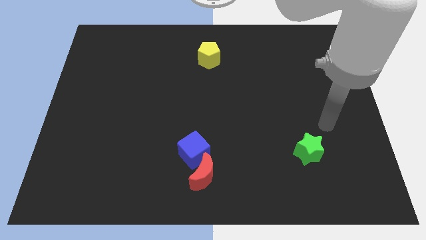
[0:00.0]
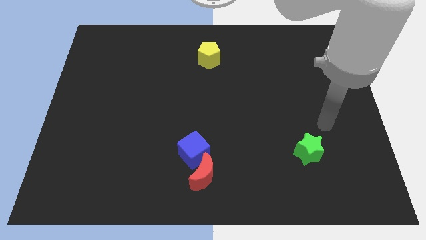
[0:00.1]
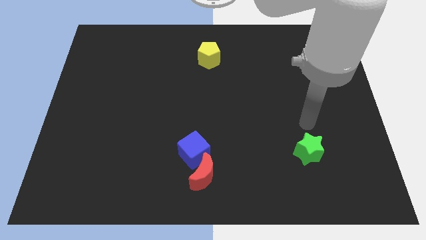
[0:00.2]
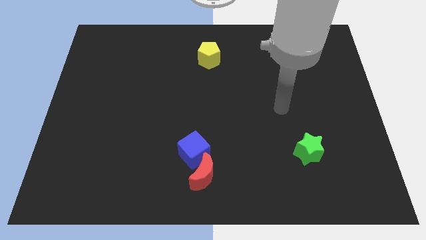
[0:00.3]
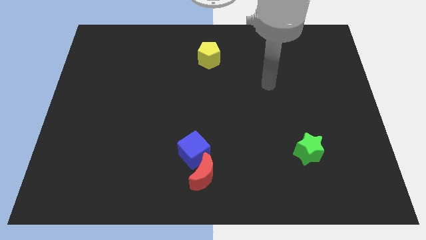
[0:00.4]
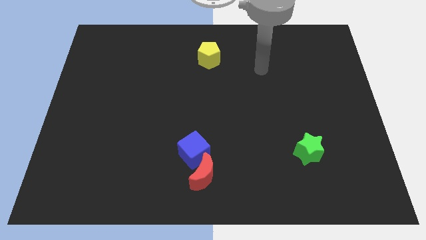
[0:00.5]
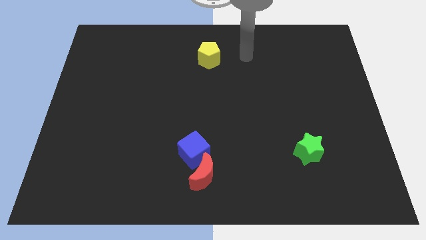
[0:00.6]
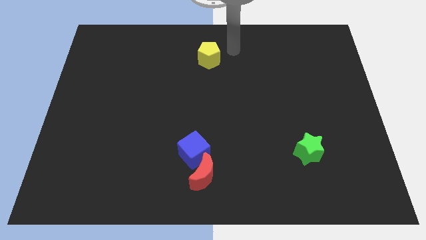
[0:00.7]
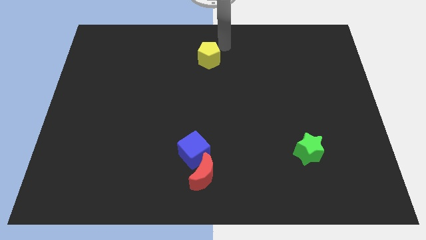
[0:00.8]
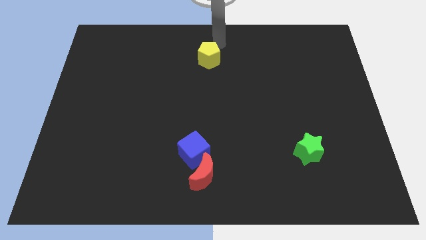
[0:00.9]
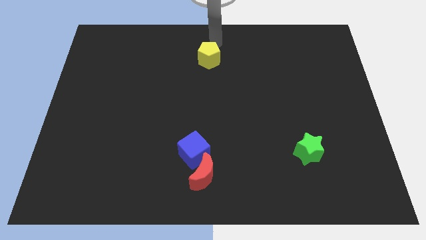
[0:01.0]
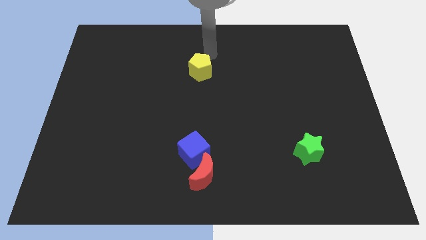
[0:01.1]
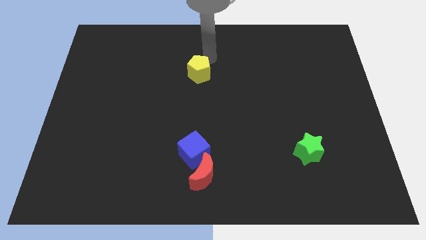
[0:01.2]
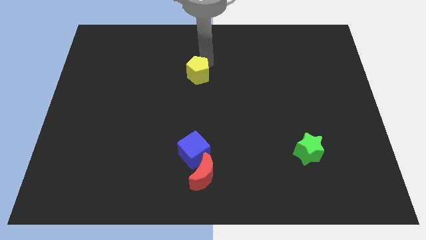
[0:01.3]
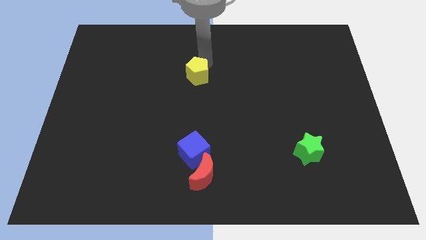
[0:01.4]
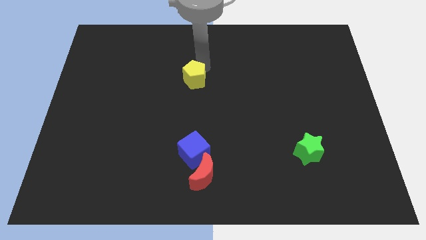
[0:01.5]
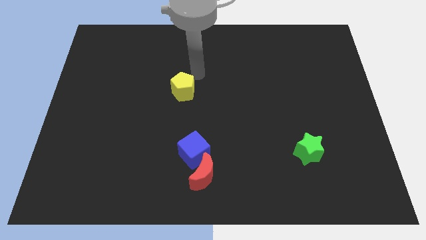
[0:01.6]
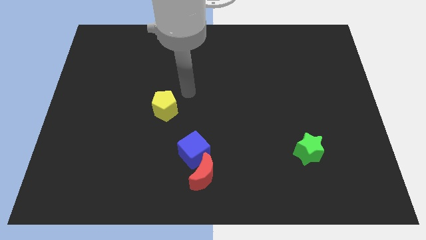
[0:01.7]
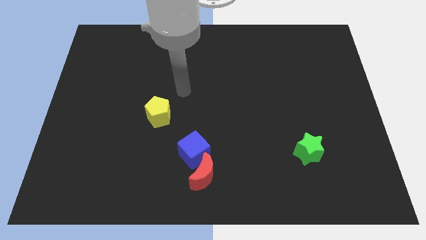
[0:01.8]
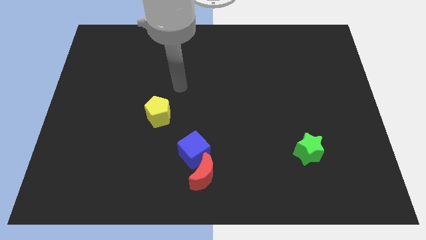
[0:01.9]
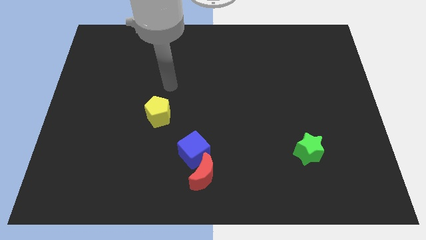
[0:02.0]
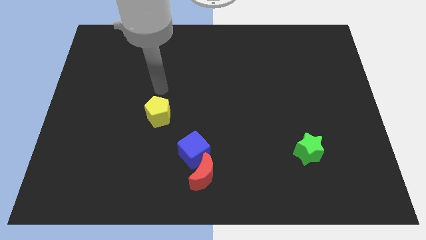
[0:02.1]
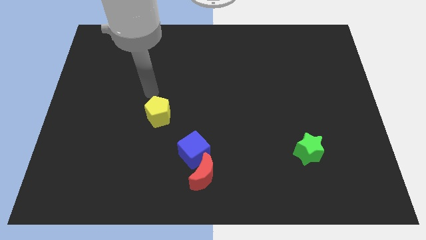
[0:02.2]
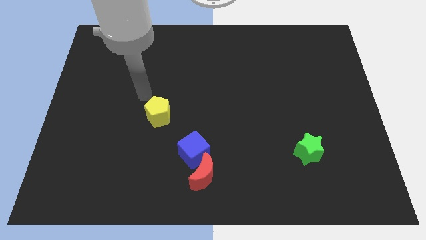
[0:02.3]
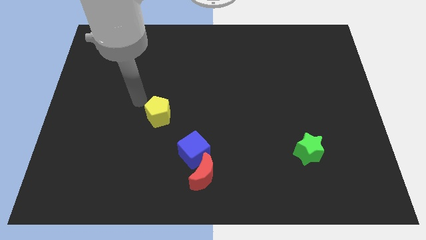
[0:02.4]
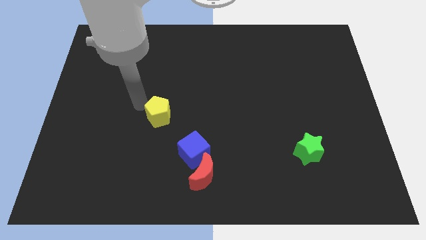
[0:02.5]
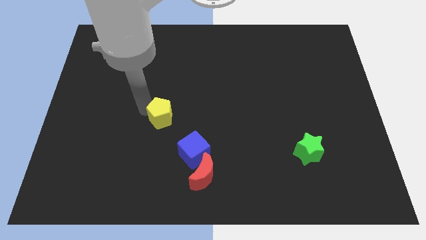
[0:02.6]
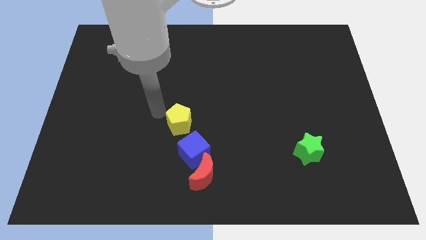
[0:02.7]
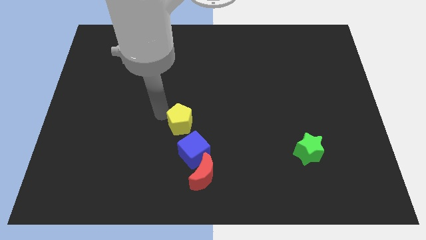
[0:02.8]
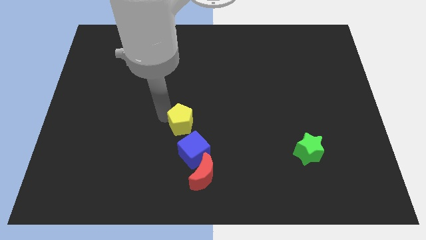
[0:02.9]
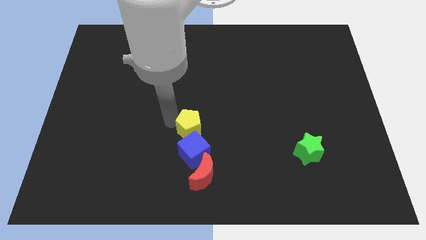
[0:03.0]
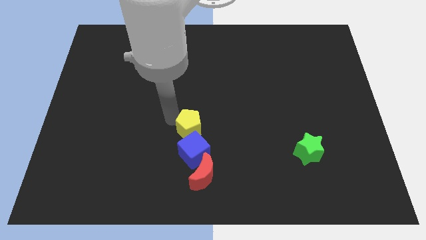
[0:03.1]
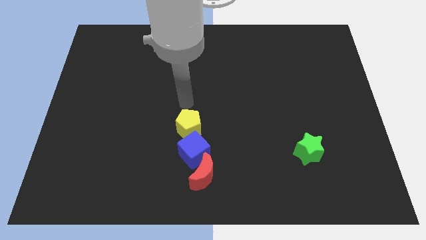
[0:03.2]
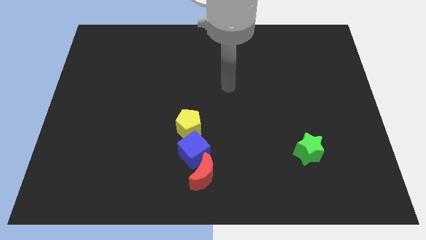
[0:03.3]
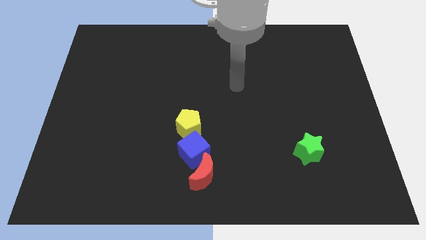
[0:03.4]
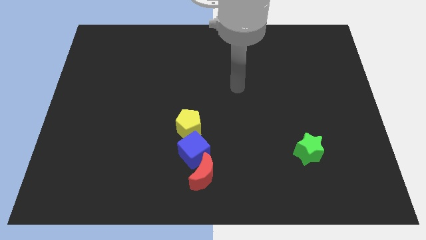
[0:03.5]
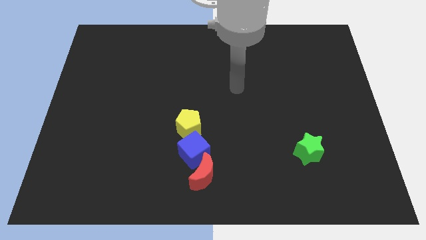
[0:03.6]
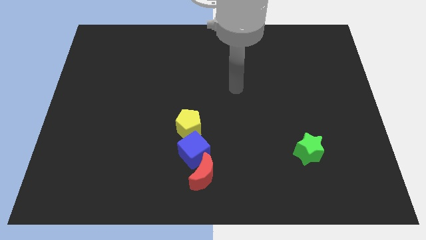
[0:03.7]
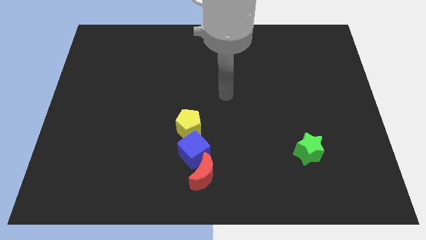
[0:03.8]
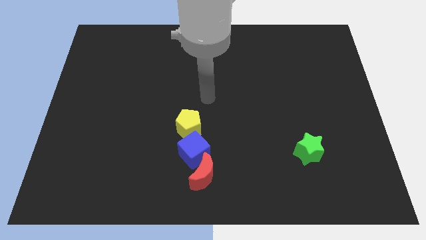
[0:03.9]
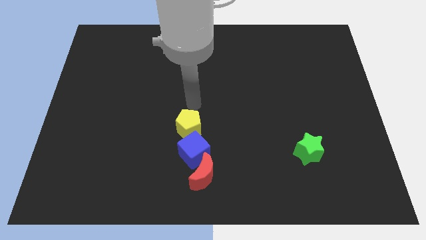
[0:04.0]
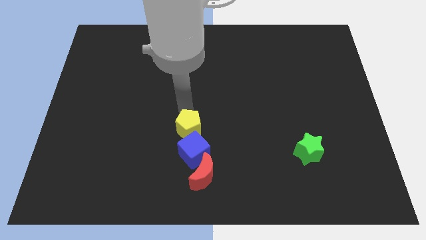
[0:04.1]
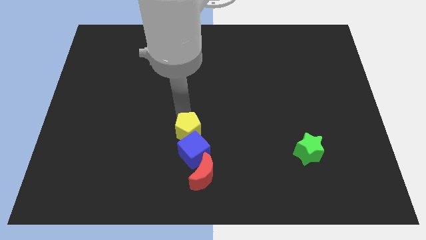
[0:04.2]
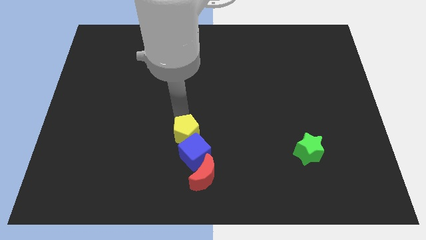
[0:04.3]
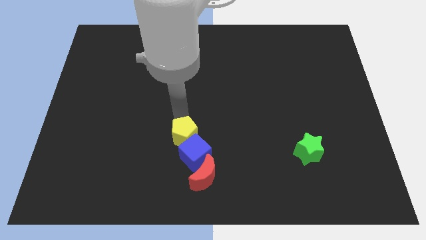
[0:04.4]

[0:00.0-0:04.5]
slide the yellow pentagon close to the blue block

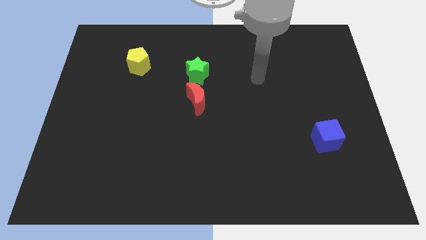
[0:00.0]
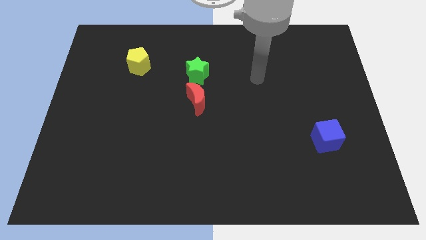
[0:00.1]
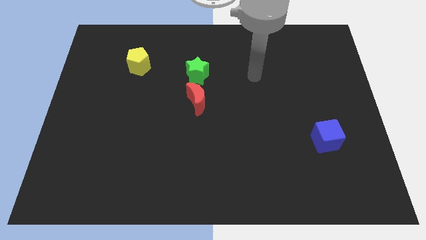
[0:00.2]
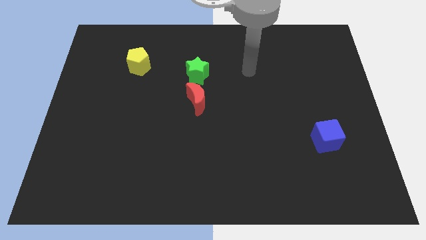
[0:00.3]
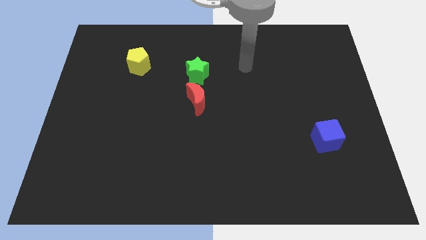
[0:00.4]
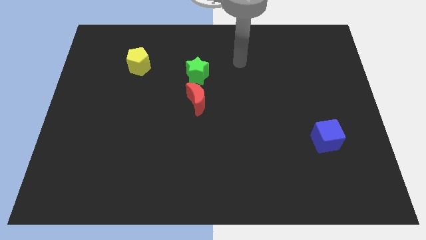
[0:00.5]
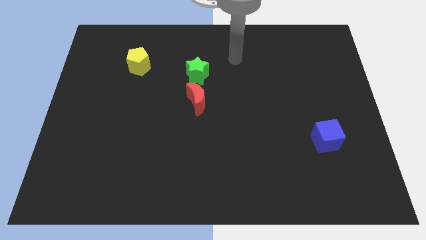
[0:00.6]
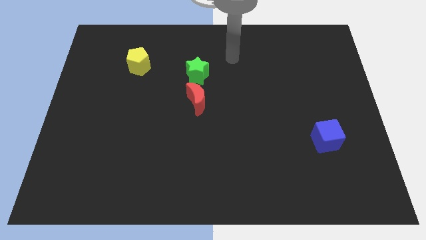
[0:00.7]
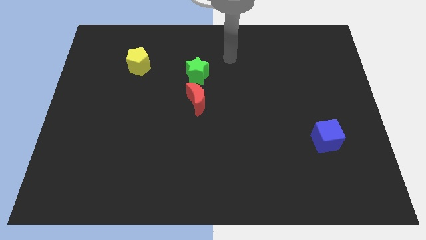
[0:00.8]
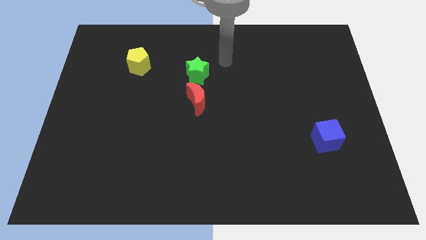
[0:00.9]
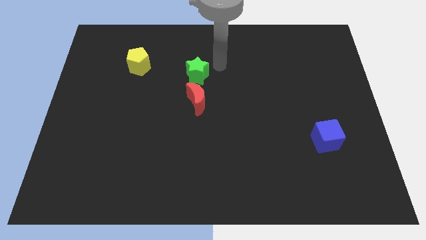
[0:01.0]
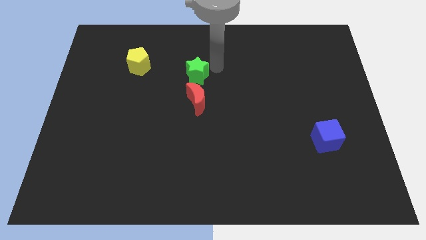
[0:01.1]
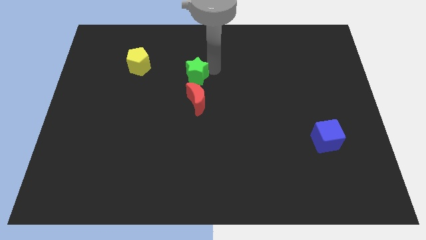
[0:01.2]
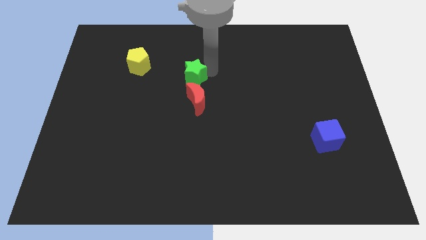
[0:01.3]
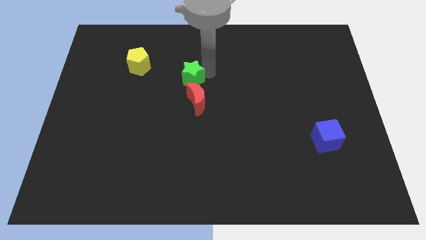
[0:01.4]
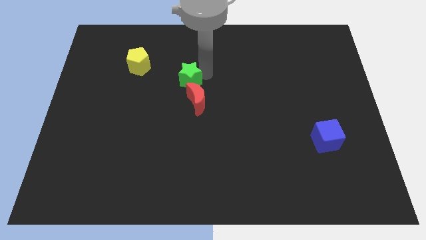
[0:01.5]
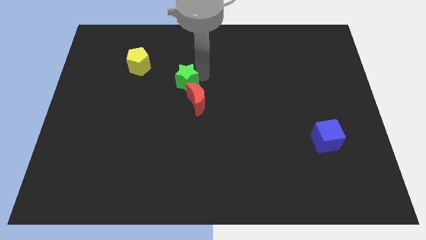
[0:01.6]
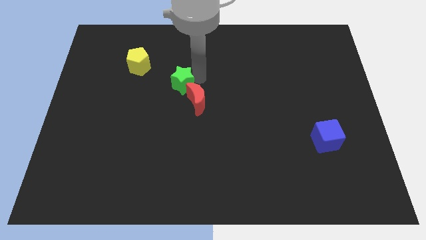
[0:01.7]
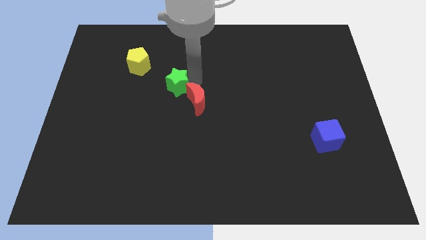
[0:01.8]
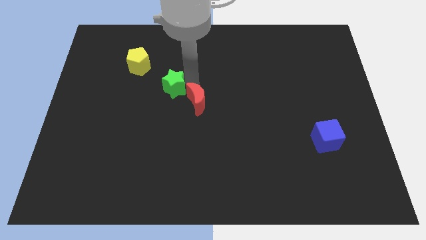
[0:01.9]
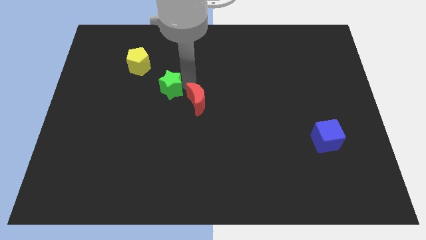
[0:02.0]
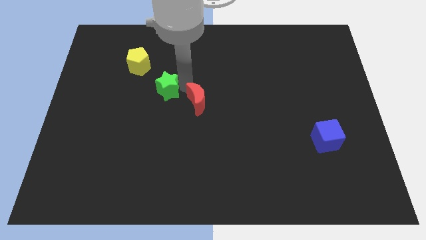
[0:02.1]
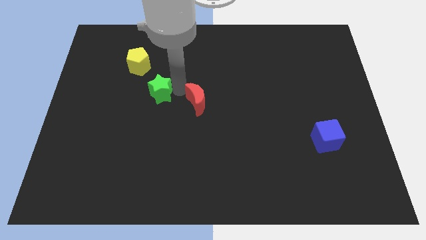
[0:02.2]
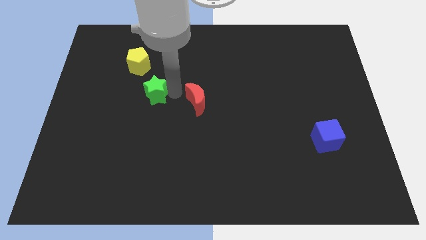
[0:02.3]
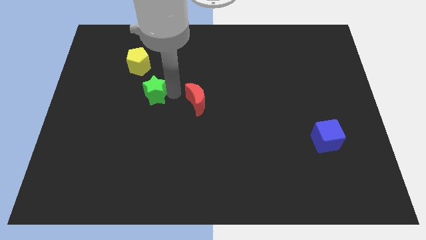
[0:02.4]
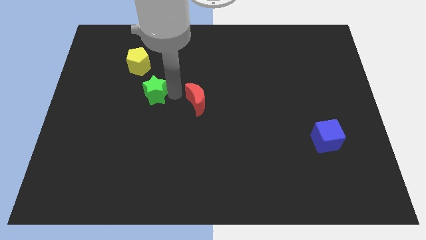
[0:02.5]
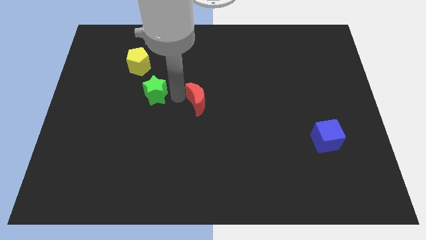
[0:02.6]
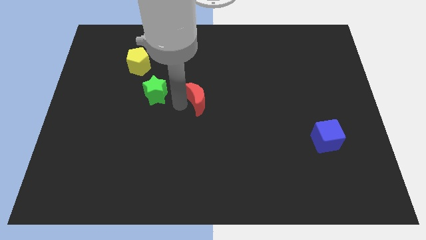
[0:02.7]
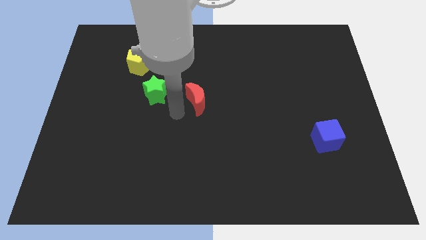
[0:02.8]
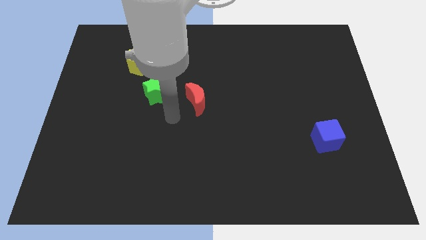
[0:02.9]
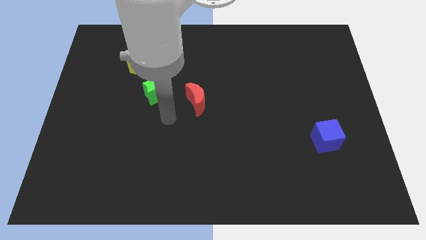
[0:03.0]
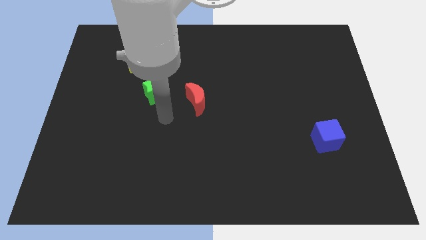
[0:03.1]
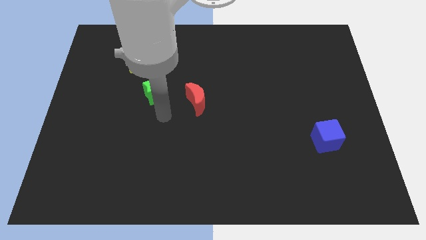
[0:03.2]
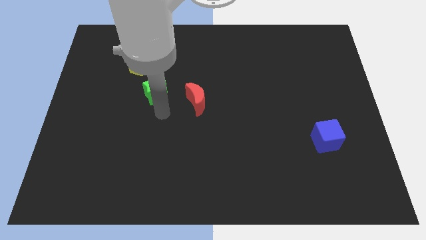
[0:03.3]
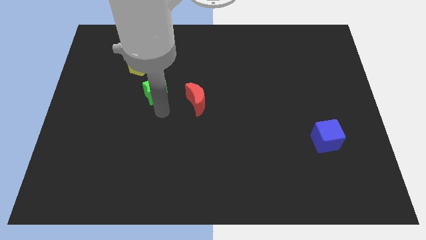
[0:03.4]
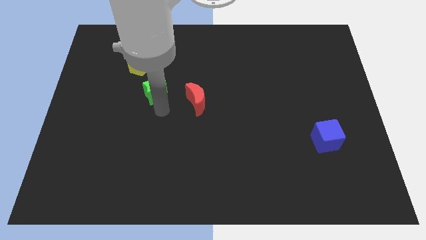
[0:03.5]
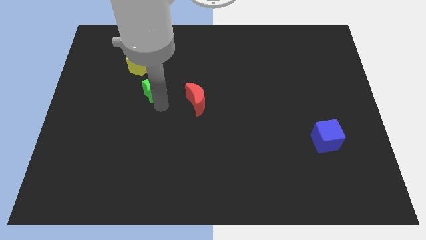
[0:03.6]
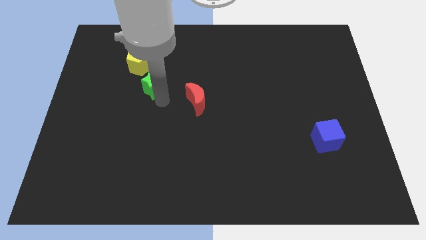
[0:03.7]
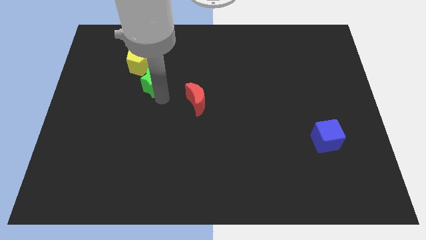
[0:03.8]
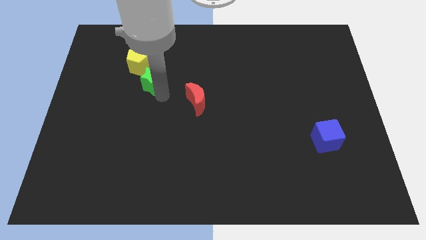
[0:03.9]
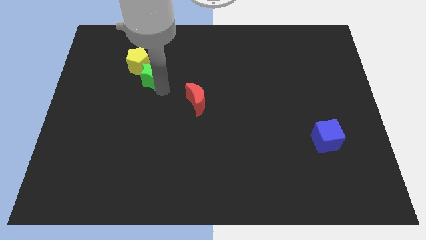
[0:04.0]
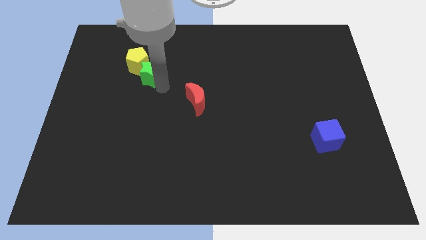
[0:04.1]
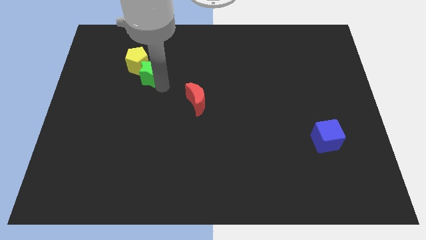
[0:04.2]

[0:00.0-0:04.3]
put the green block close to the yellow block
